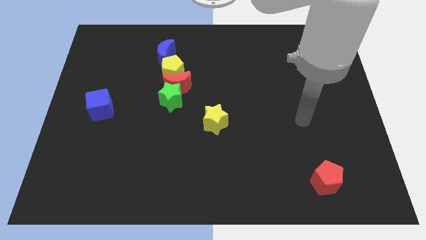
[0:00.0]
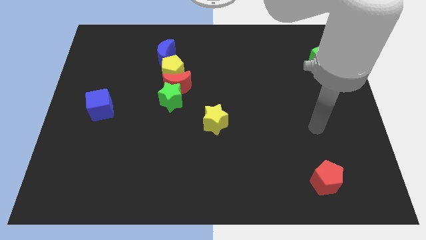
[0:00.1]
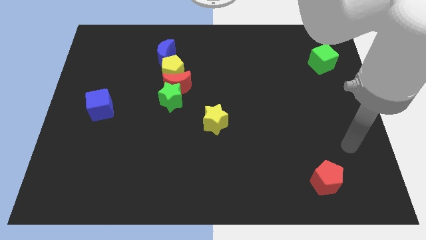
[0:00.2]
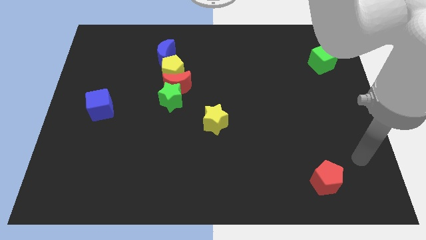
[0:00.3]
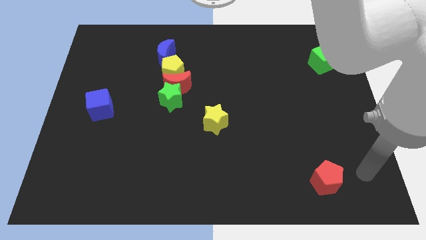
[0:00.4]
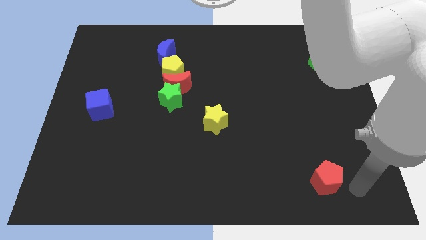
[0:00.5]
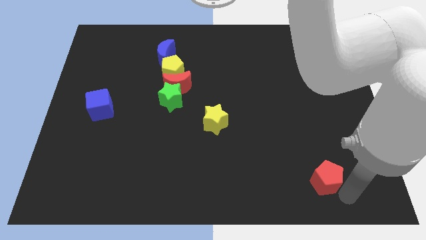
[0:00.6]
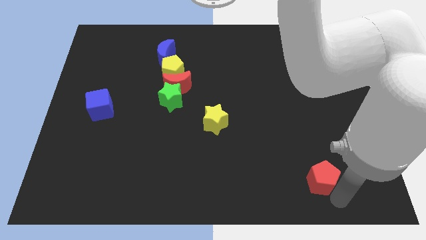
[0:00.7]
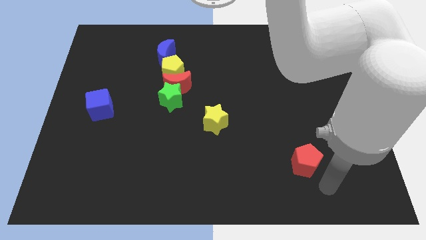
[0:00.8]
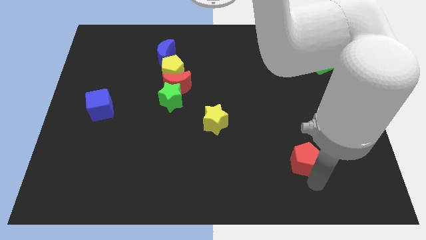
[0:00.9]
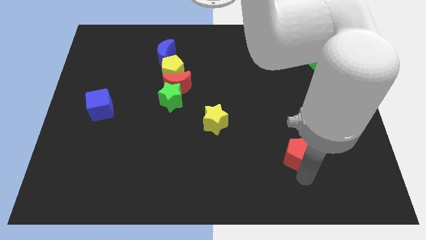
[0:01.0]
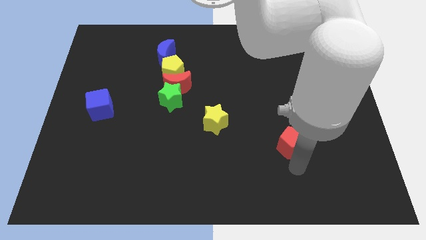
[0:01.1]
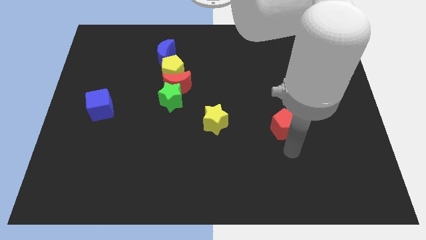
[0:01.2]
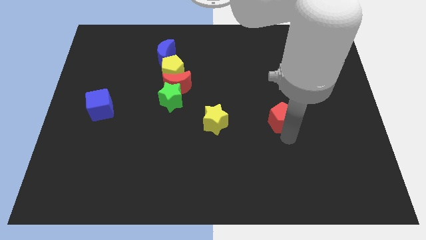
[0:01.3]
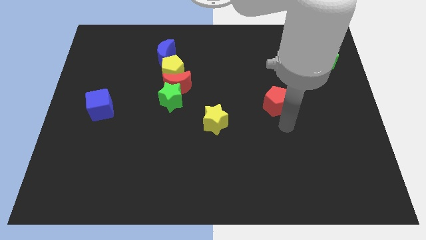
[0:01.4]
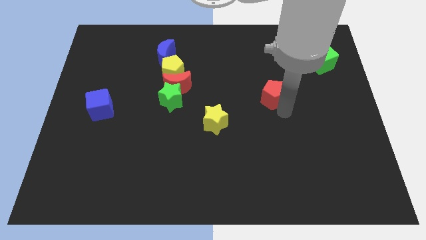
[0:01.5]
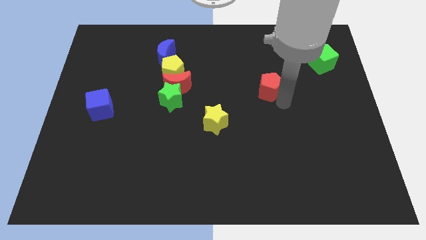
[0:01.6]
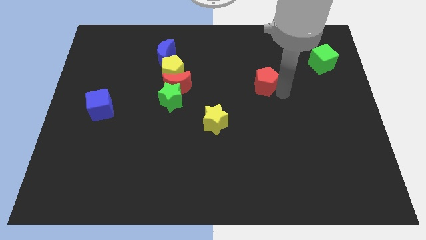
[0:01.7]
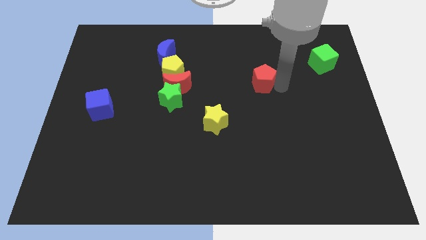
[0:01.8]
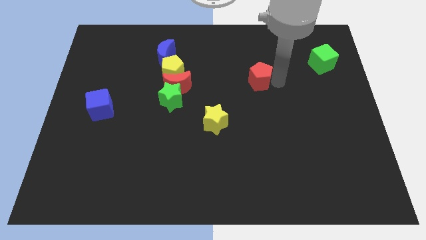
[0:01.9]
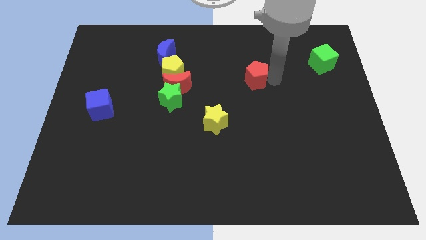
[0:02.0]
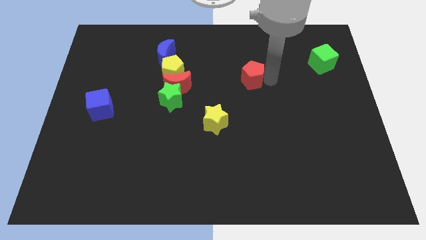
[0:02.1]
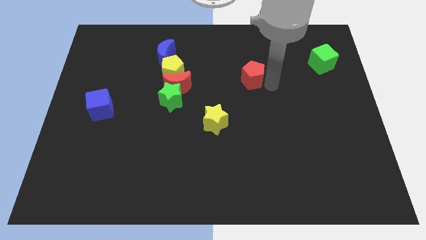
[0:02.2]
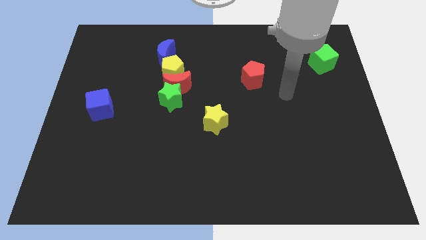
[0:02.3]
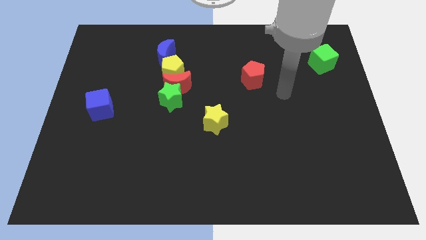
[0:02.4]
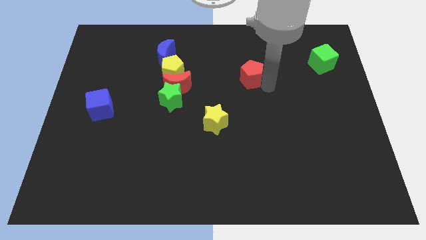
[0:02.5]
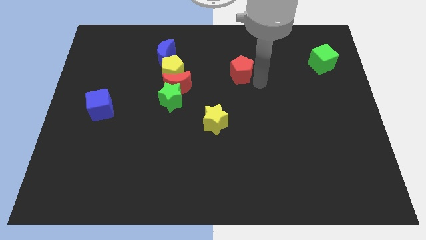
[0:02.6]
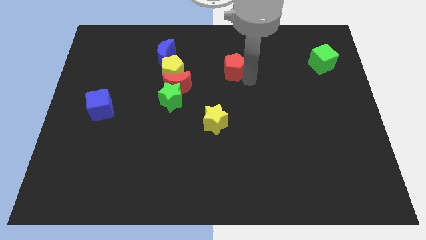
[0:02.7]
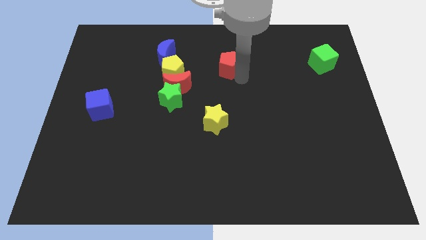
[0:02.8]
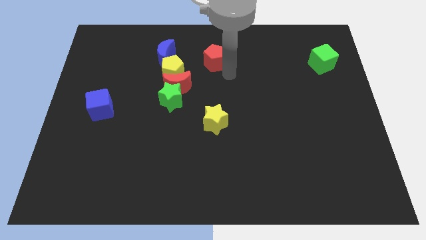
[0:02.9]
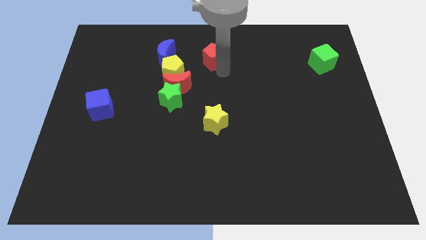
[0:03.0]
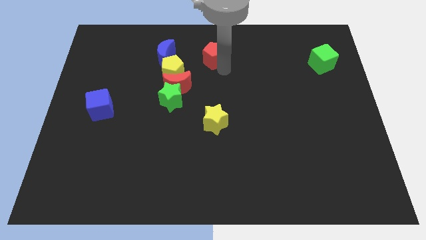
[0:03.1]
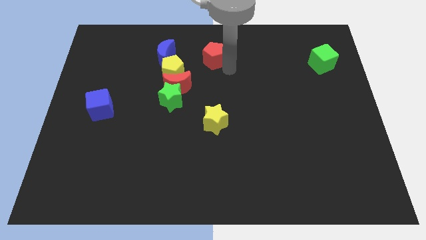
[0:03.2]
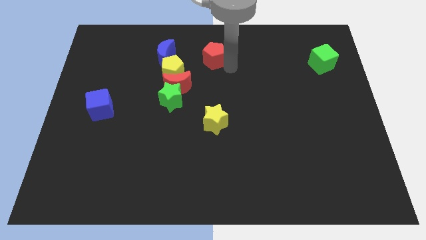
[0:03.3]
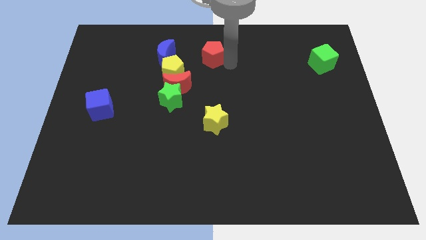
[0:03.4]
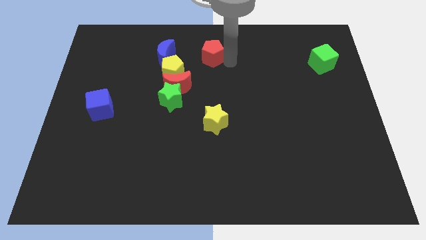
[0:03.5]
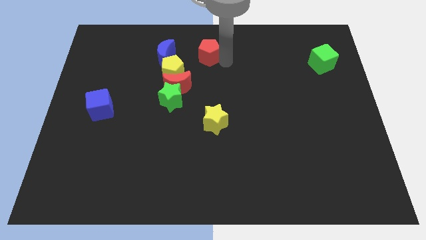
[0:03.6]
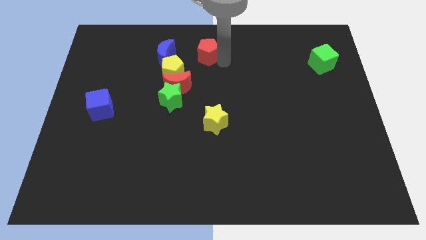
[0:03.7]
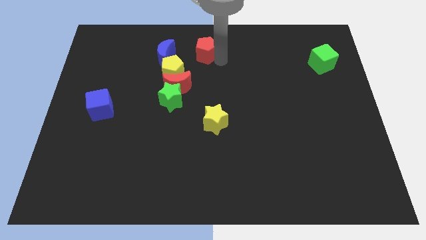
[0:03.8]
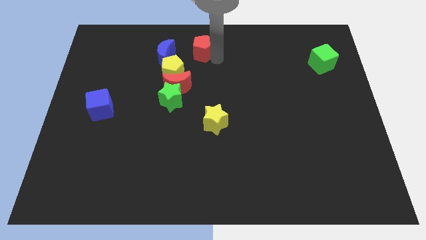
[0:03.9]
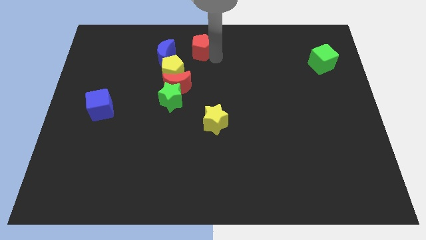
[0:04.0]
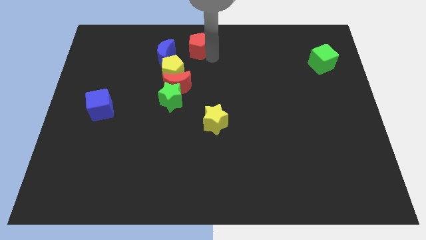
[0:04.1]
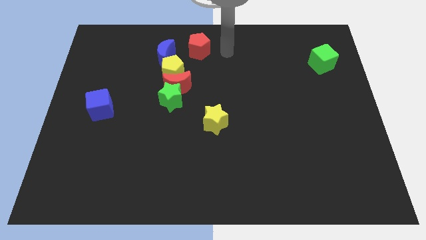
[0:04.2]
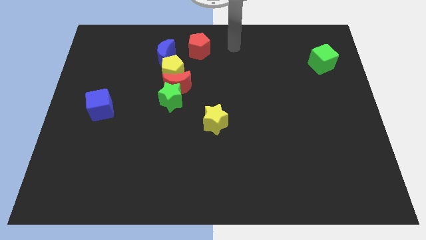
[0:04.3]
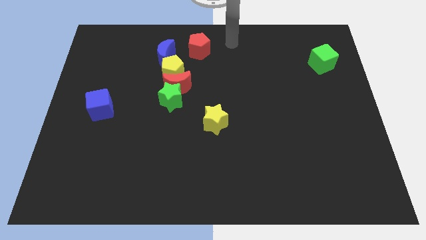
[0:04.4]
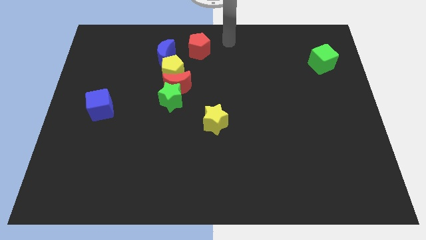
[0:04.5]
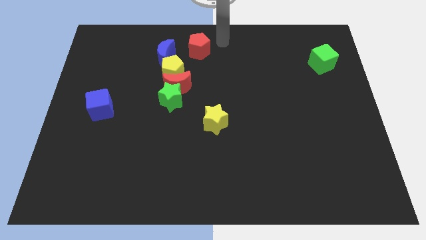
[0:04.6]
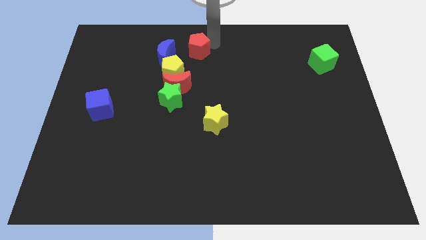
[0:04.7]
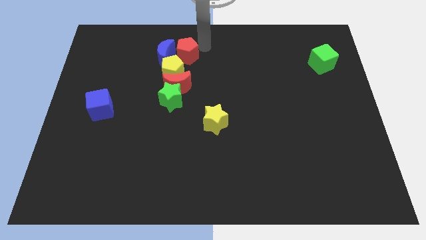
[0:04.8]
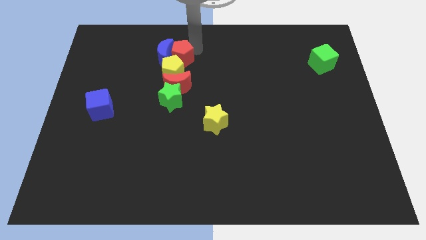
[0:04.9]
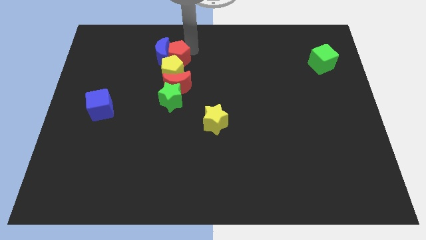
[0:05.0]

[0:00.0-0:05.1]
push the red pentagon next to the blue moon

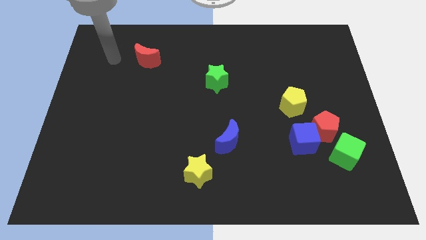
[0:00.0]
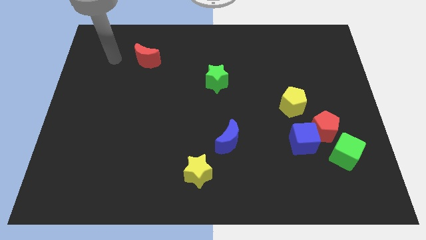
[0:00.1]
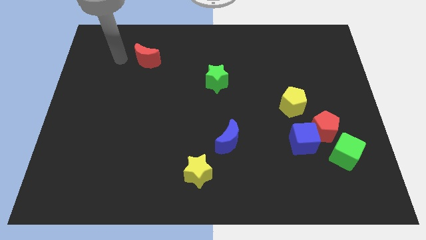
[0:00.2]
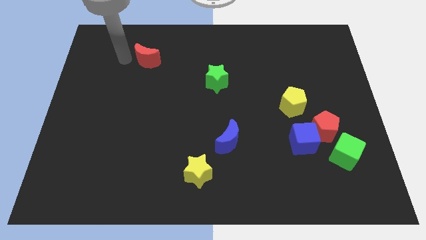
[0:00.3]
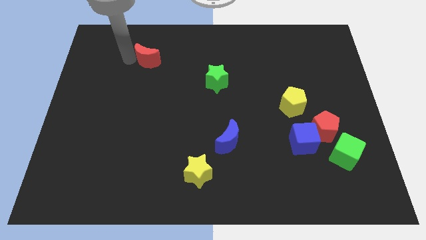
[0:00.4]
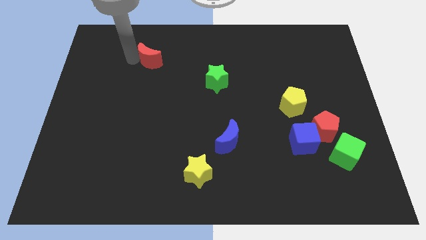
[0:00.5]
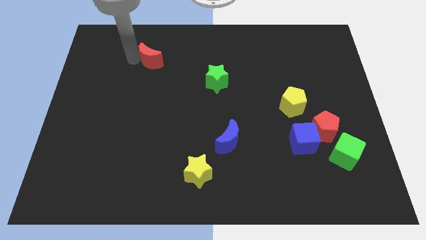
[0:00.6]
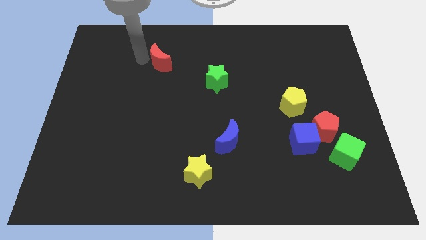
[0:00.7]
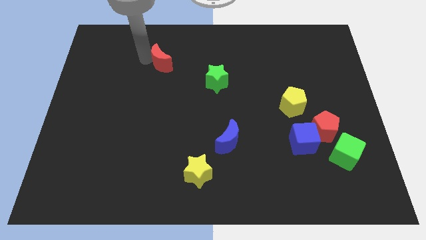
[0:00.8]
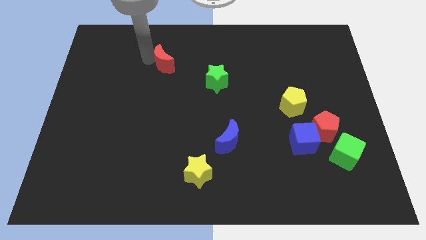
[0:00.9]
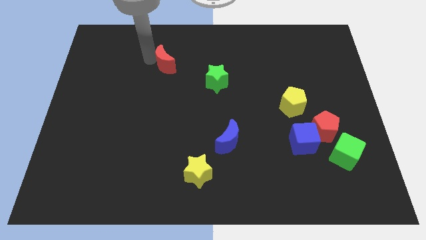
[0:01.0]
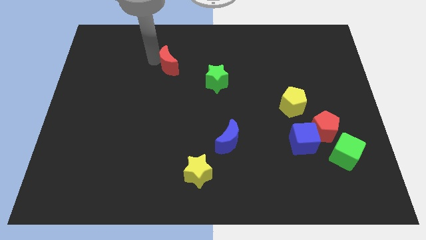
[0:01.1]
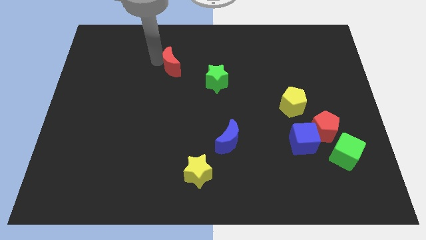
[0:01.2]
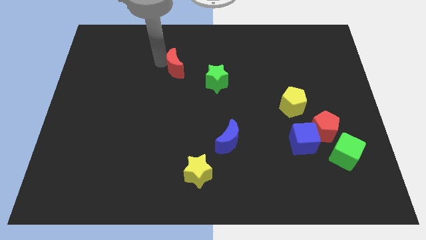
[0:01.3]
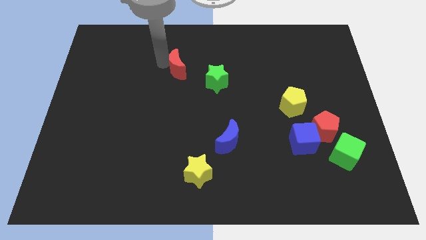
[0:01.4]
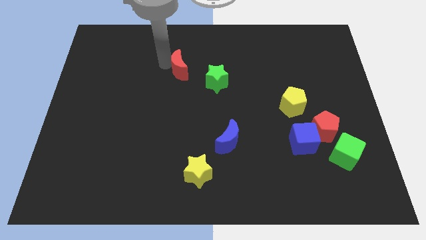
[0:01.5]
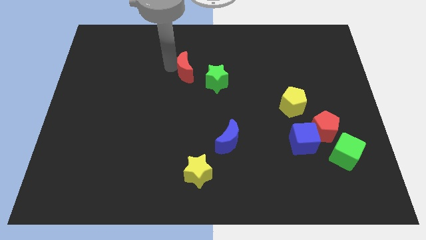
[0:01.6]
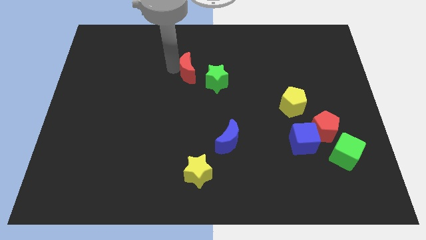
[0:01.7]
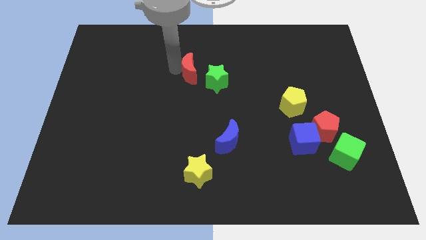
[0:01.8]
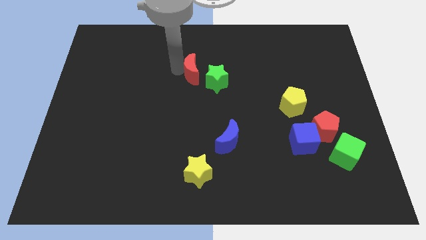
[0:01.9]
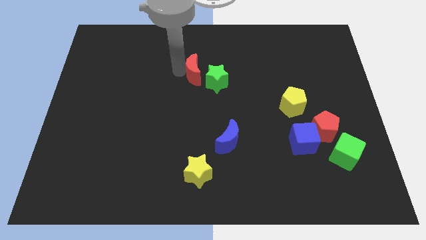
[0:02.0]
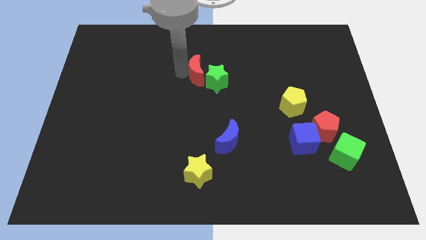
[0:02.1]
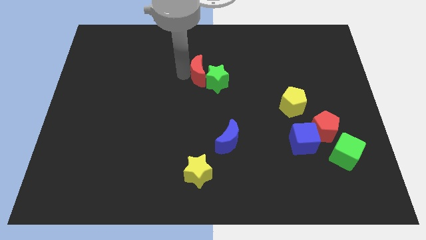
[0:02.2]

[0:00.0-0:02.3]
push the red moon to the green star

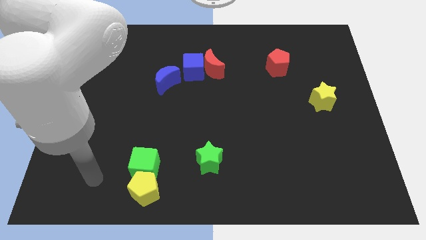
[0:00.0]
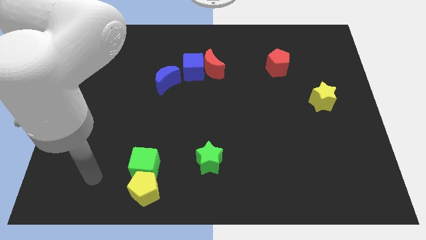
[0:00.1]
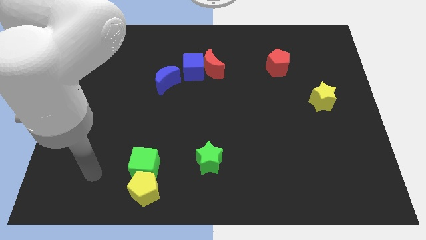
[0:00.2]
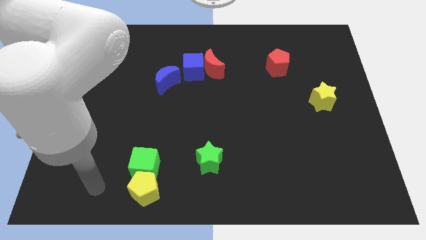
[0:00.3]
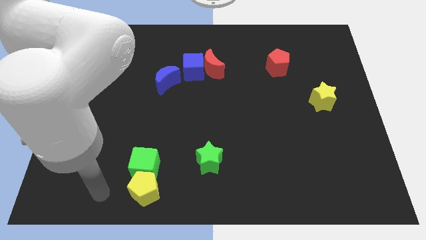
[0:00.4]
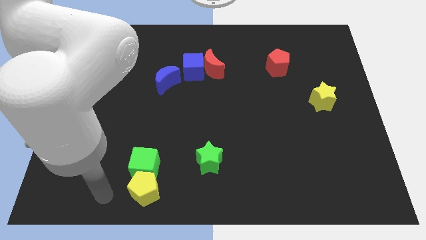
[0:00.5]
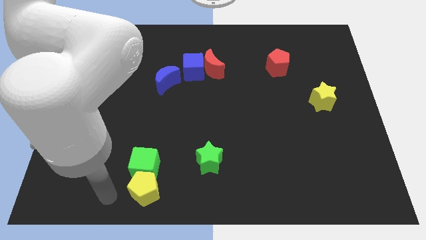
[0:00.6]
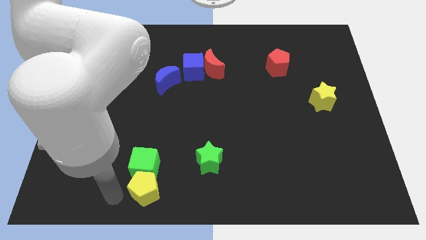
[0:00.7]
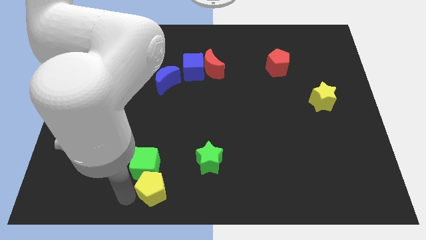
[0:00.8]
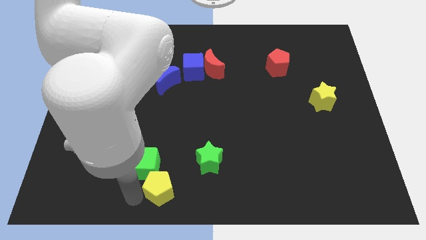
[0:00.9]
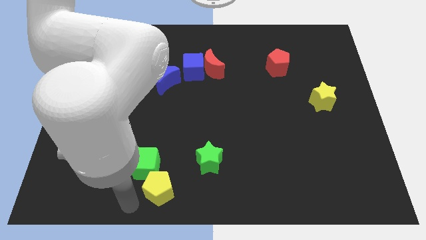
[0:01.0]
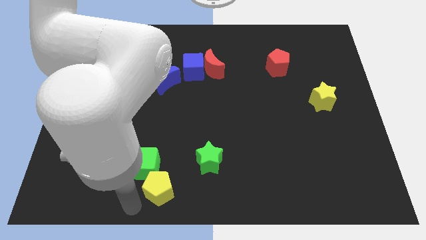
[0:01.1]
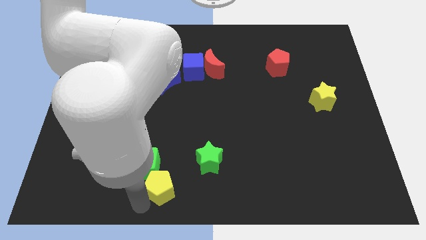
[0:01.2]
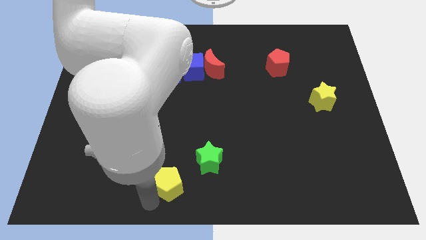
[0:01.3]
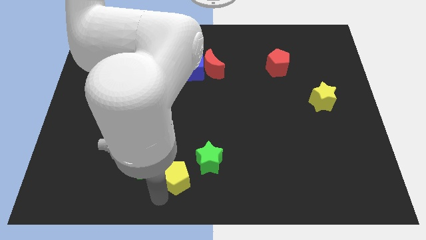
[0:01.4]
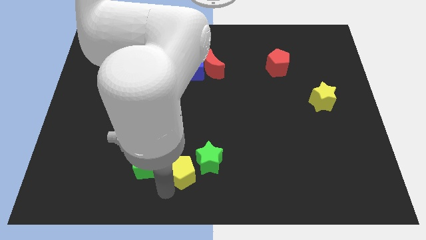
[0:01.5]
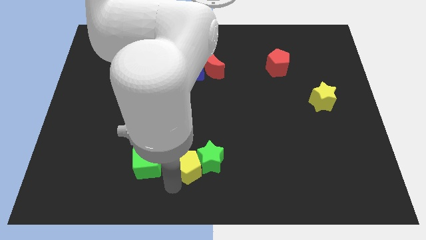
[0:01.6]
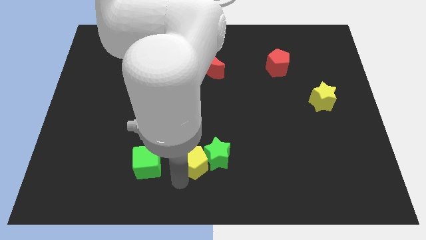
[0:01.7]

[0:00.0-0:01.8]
move the yellow pentagon to the green star
